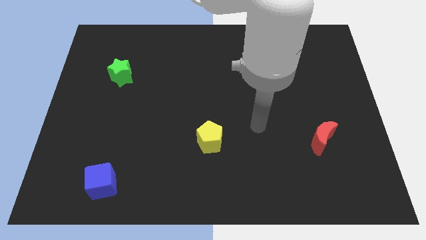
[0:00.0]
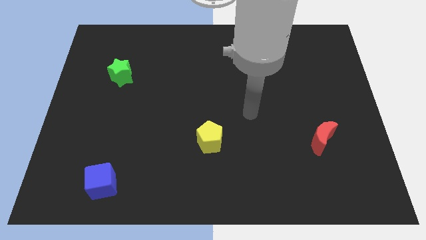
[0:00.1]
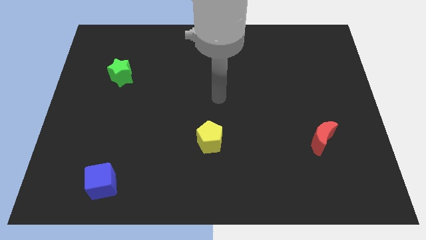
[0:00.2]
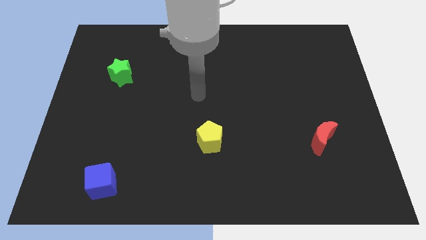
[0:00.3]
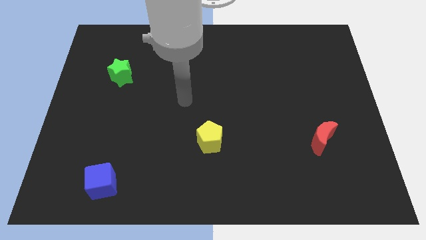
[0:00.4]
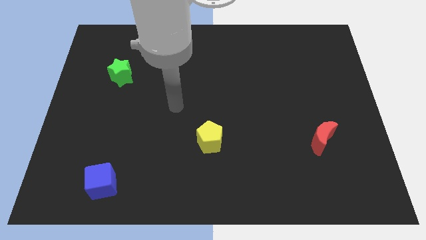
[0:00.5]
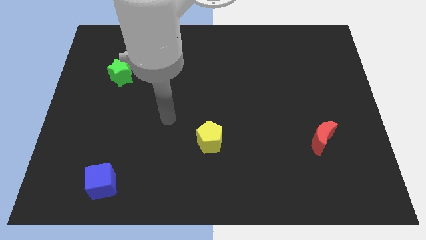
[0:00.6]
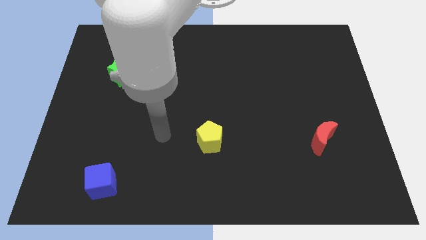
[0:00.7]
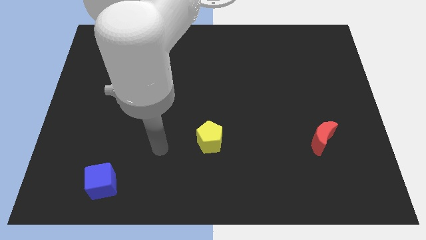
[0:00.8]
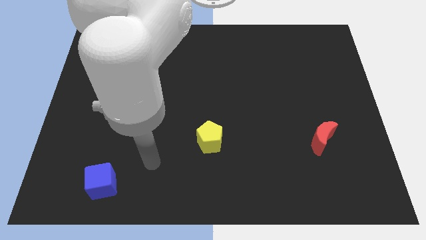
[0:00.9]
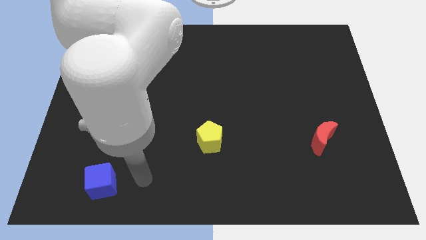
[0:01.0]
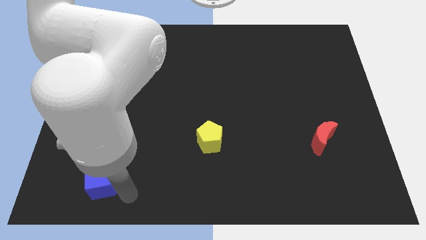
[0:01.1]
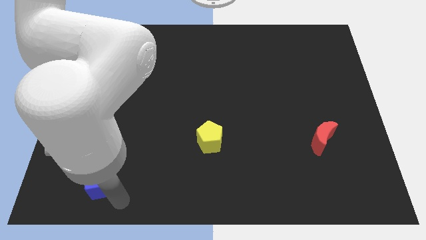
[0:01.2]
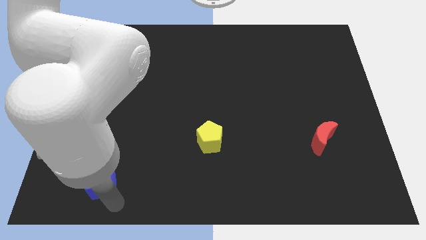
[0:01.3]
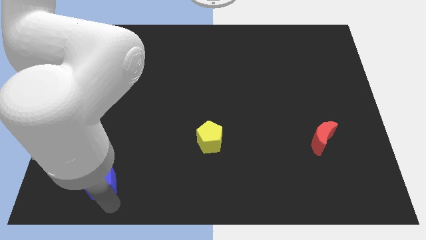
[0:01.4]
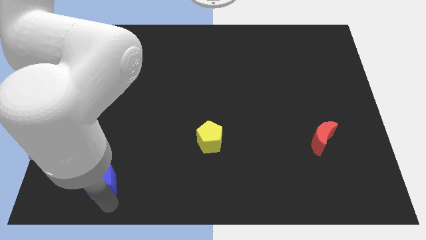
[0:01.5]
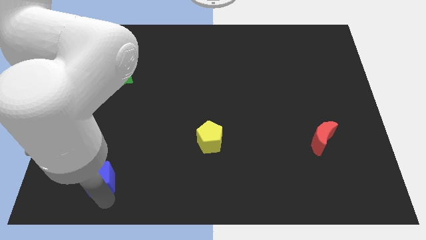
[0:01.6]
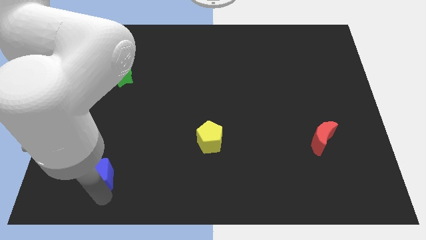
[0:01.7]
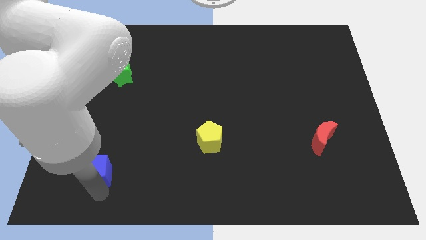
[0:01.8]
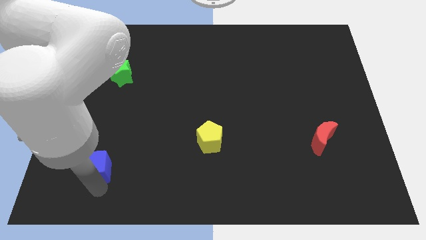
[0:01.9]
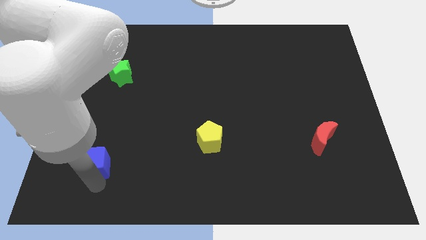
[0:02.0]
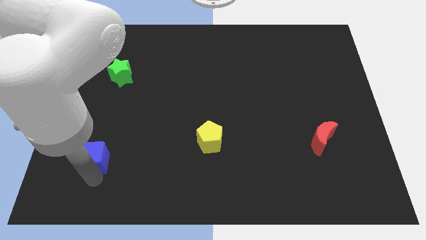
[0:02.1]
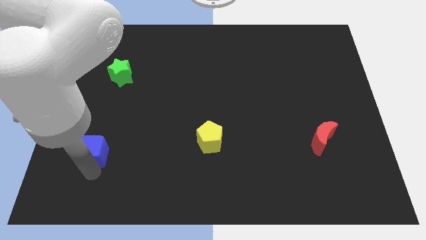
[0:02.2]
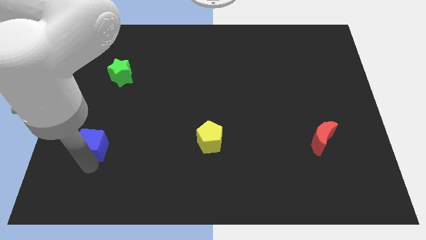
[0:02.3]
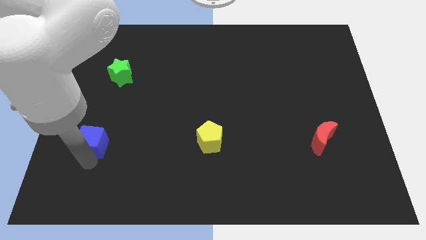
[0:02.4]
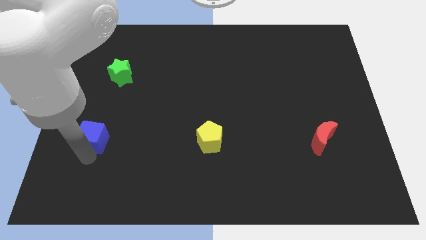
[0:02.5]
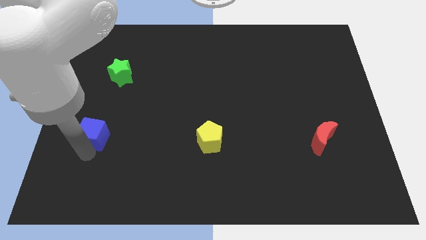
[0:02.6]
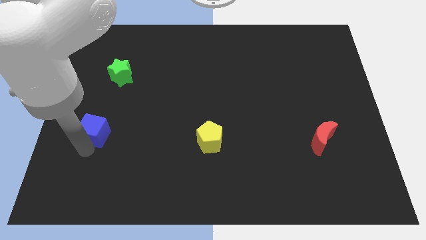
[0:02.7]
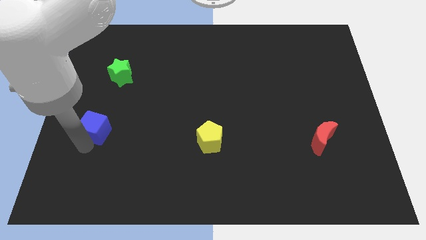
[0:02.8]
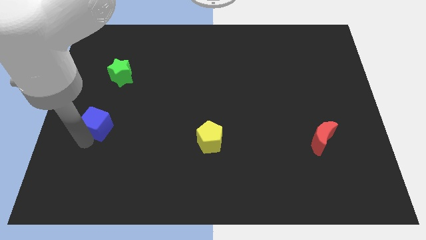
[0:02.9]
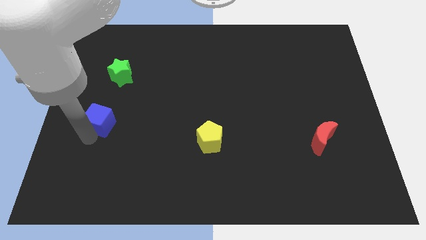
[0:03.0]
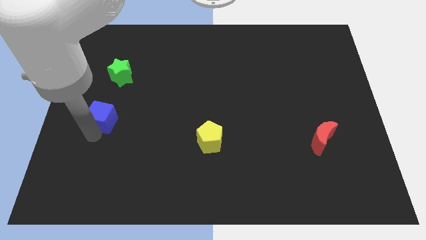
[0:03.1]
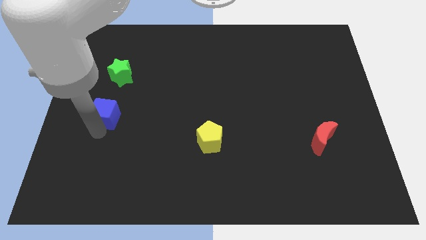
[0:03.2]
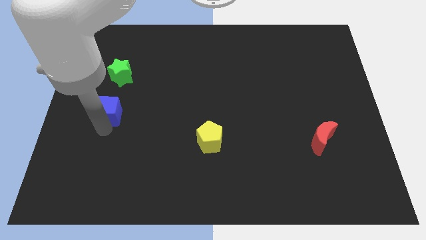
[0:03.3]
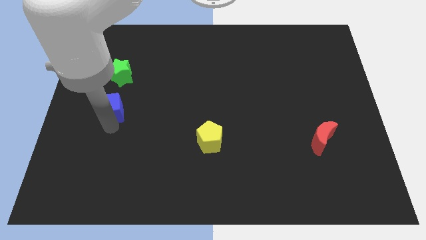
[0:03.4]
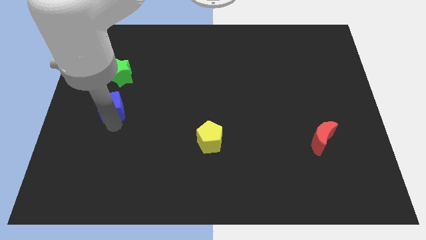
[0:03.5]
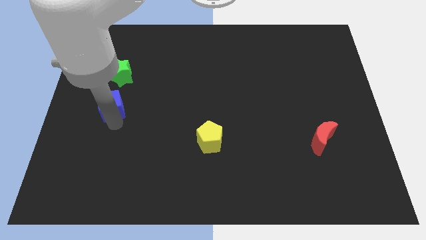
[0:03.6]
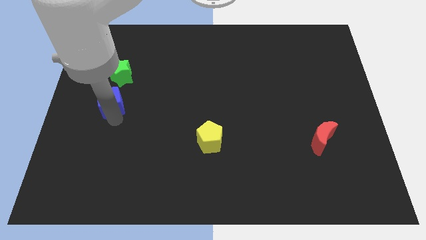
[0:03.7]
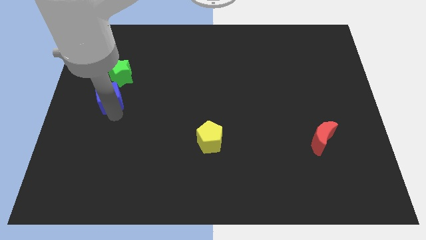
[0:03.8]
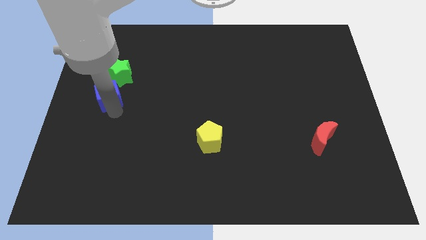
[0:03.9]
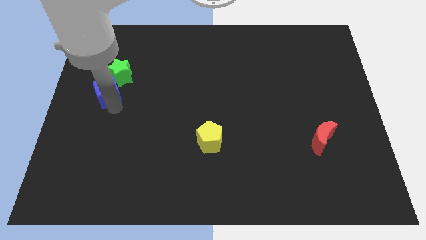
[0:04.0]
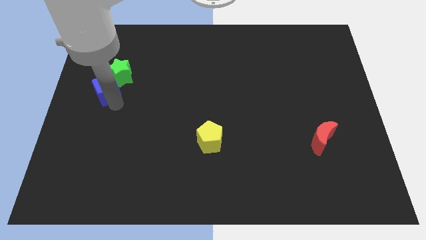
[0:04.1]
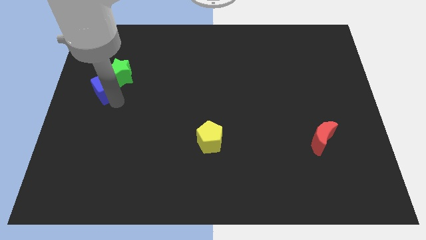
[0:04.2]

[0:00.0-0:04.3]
move the blue block close to the star

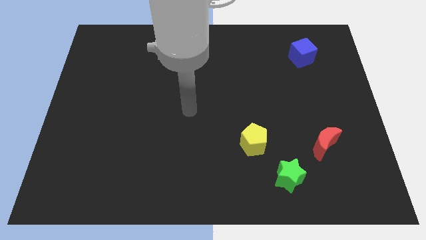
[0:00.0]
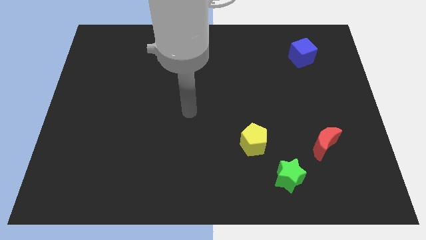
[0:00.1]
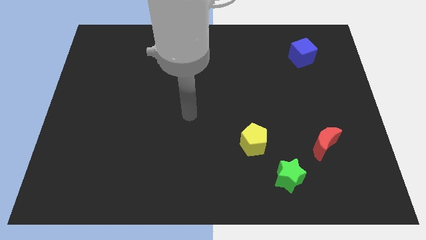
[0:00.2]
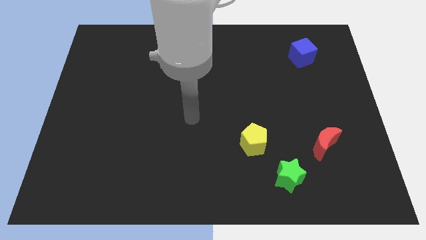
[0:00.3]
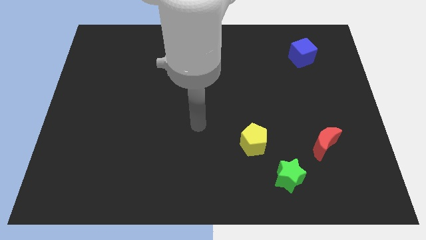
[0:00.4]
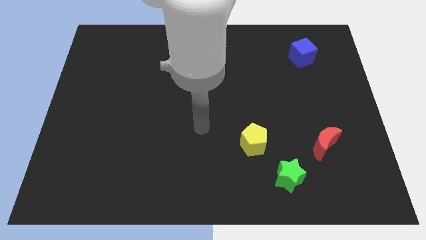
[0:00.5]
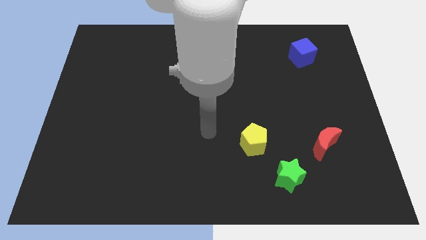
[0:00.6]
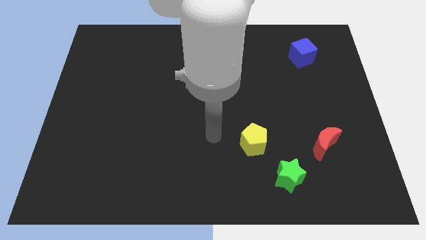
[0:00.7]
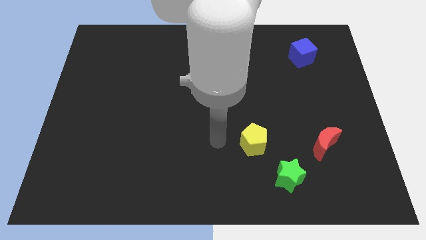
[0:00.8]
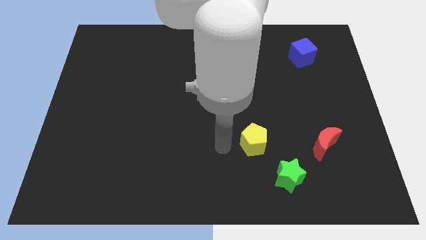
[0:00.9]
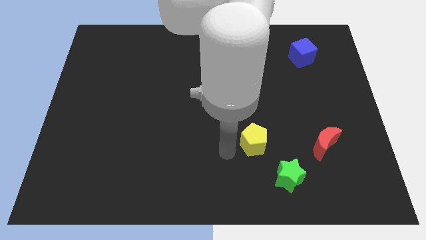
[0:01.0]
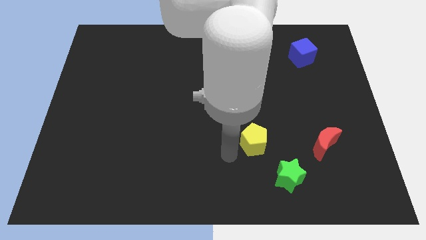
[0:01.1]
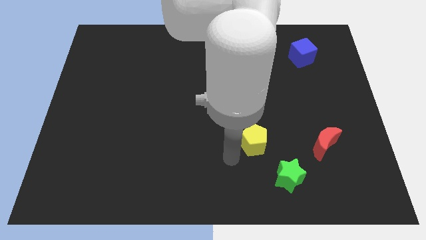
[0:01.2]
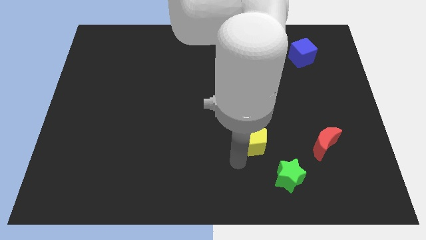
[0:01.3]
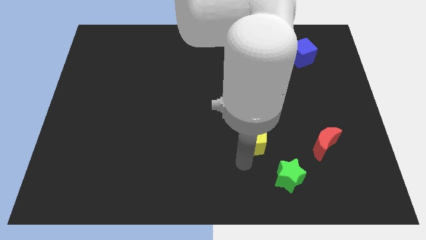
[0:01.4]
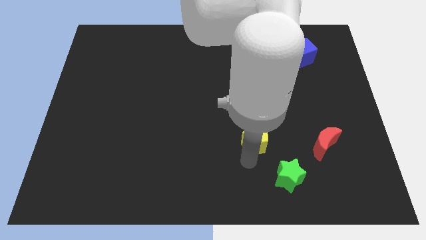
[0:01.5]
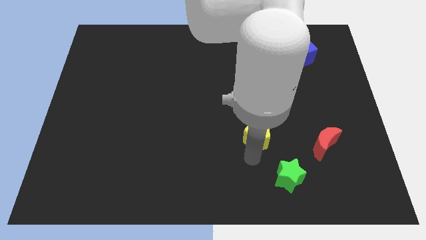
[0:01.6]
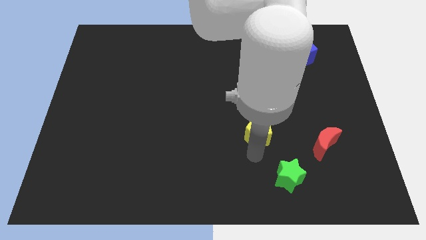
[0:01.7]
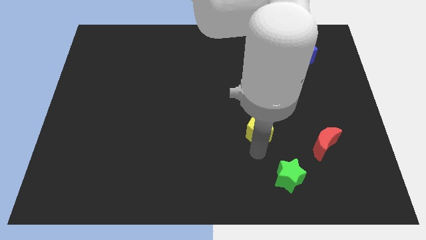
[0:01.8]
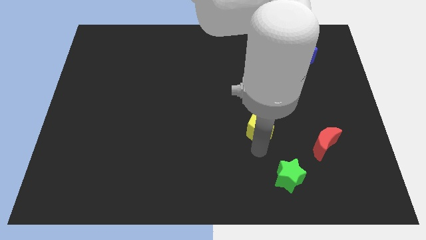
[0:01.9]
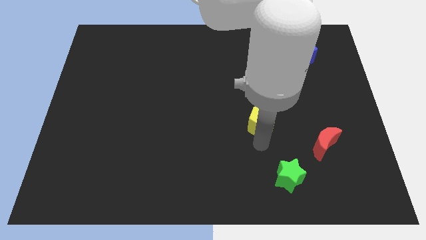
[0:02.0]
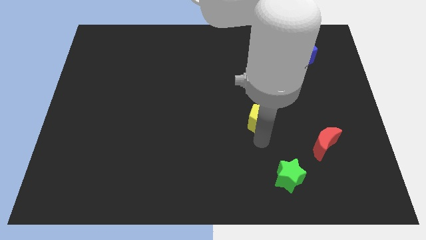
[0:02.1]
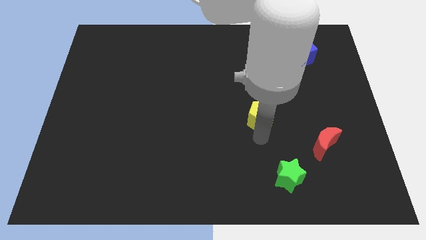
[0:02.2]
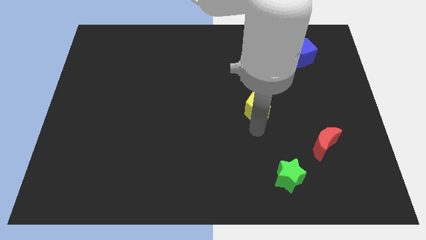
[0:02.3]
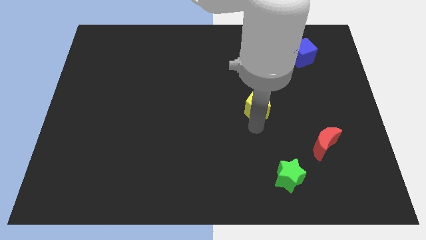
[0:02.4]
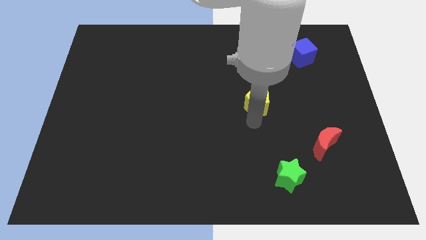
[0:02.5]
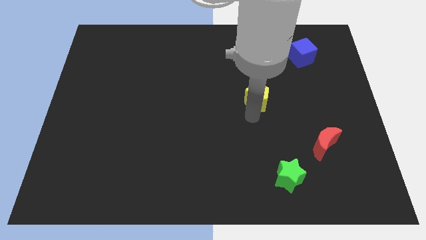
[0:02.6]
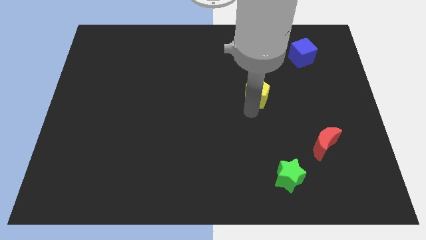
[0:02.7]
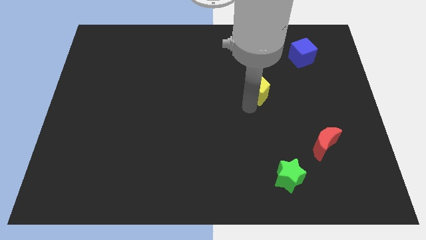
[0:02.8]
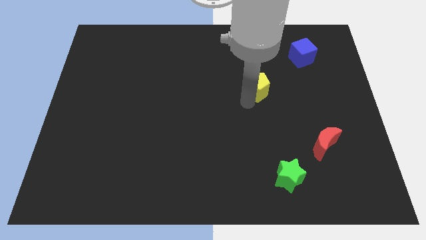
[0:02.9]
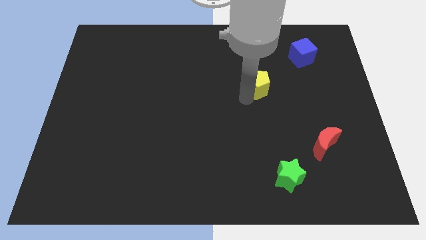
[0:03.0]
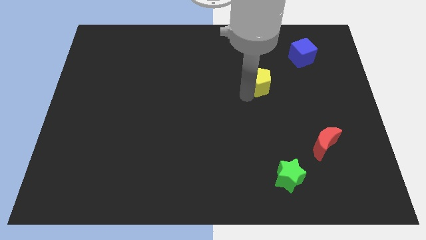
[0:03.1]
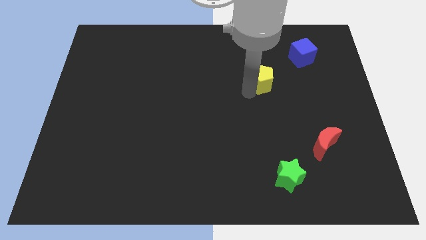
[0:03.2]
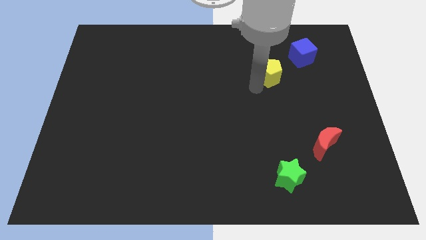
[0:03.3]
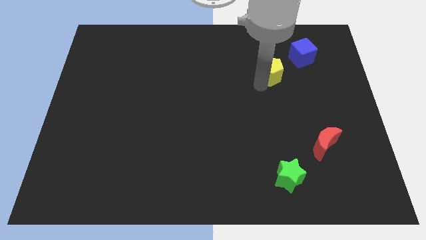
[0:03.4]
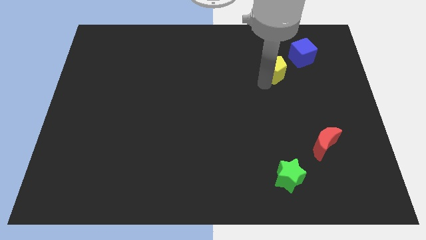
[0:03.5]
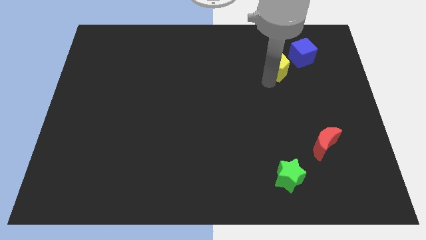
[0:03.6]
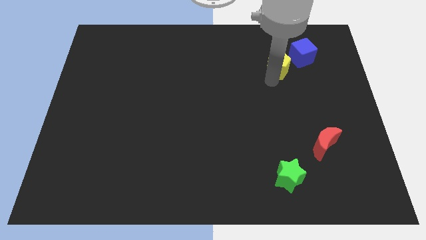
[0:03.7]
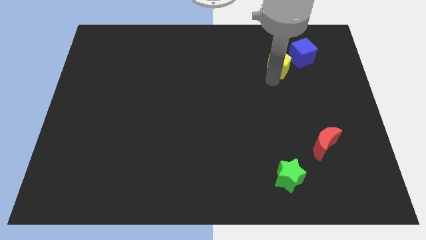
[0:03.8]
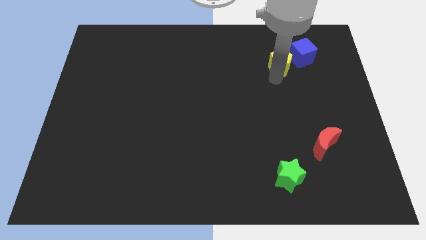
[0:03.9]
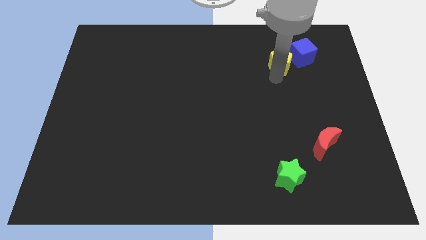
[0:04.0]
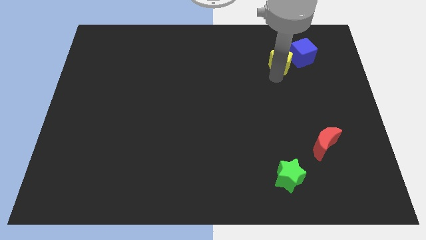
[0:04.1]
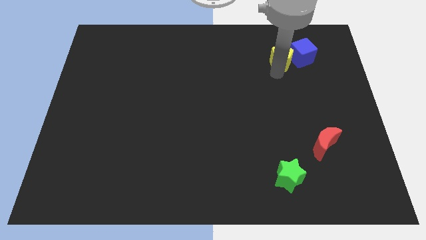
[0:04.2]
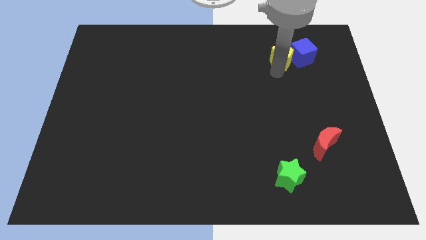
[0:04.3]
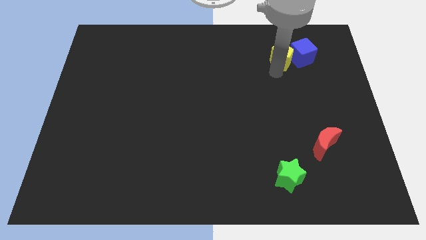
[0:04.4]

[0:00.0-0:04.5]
push the pentagon next to the cube

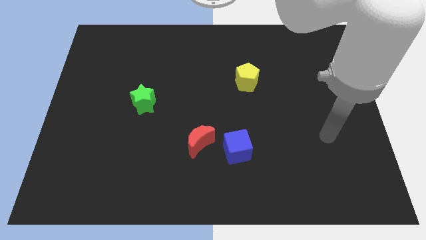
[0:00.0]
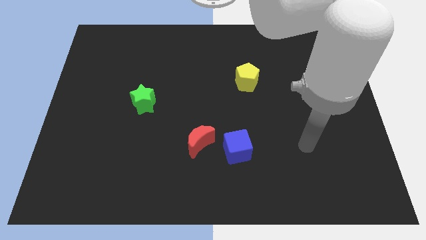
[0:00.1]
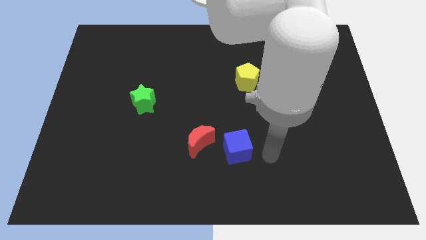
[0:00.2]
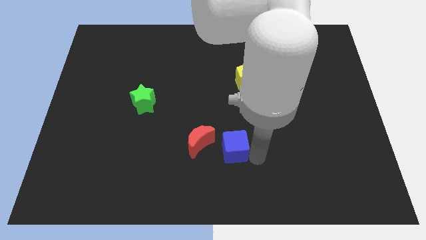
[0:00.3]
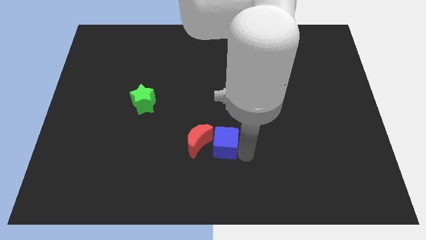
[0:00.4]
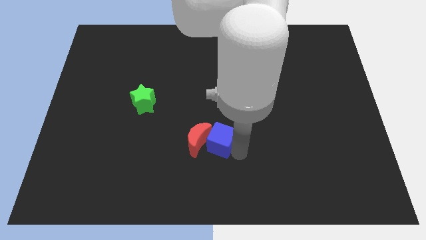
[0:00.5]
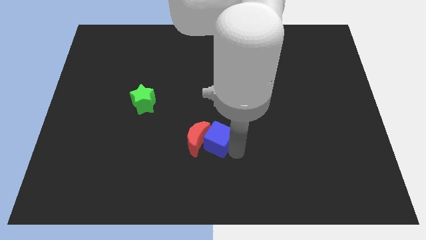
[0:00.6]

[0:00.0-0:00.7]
move the blue block to the moon
